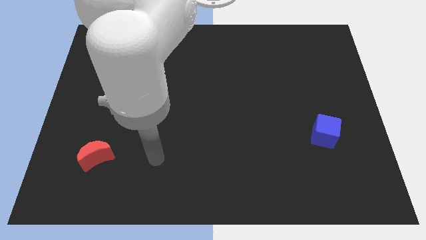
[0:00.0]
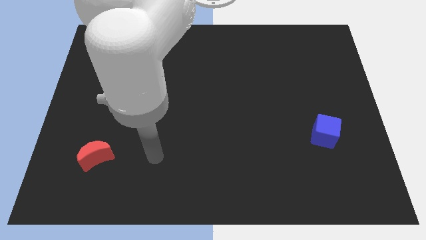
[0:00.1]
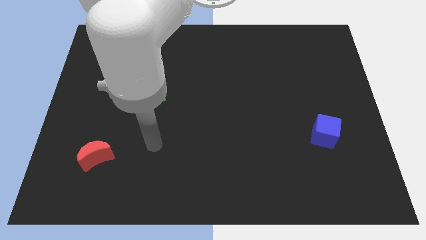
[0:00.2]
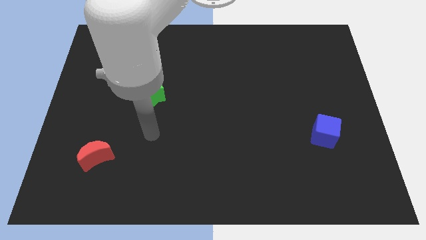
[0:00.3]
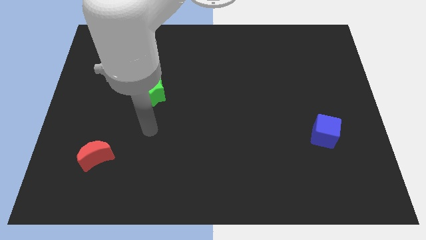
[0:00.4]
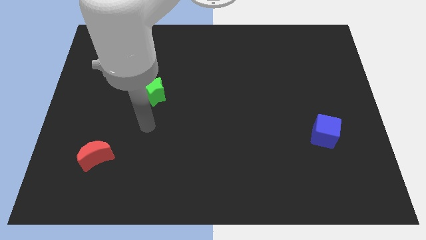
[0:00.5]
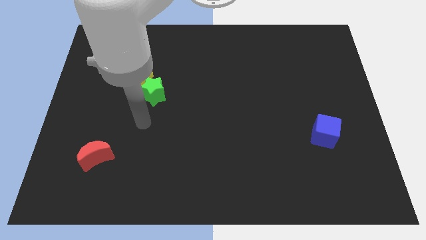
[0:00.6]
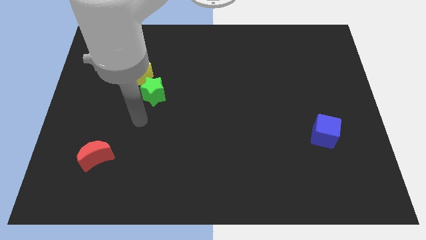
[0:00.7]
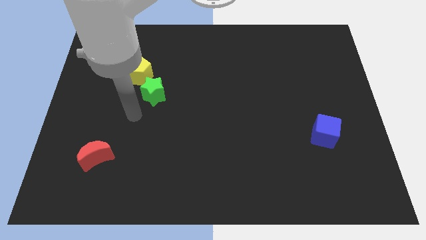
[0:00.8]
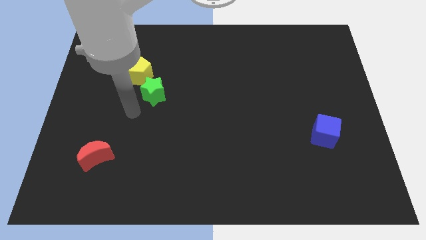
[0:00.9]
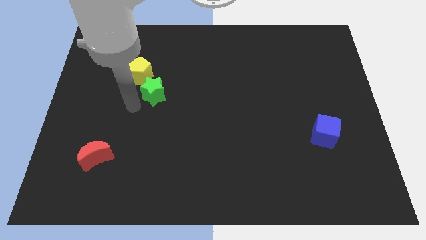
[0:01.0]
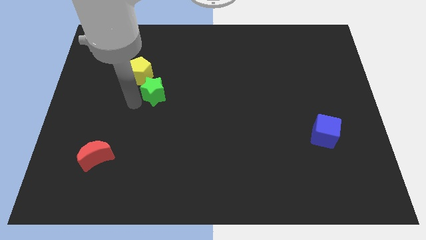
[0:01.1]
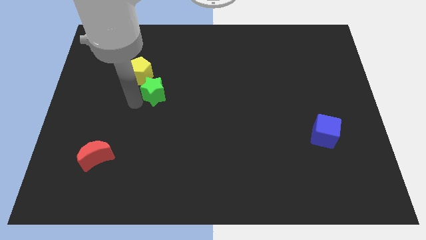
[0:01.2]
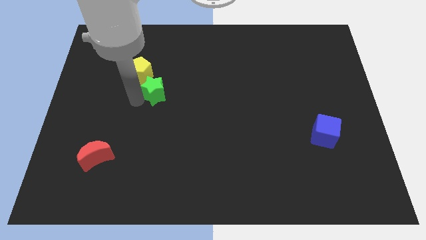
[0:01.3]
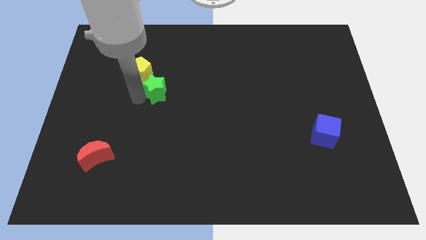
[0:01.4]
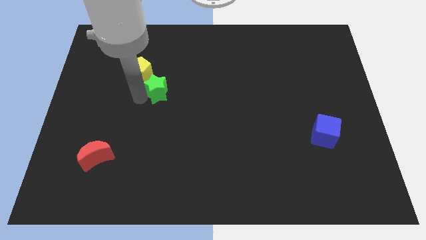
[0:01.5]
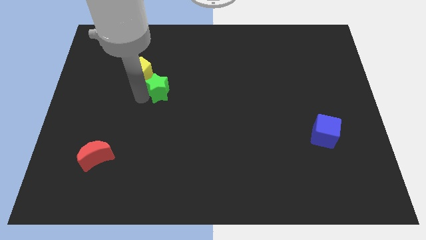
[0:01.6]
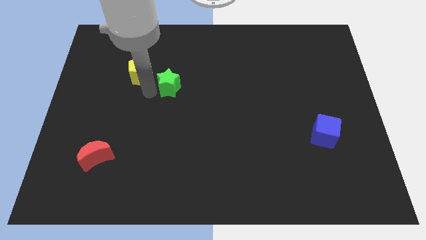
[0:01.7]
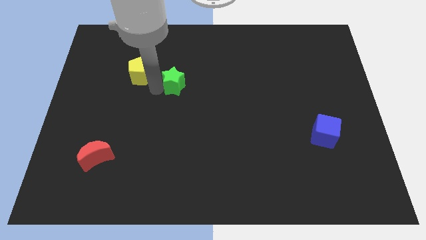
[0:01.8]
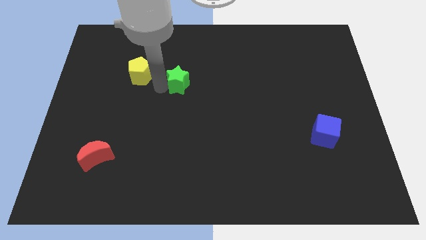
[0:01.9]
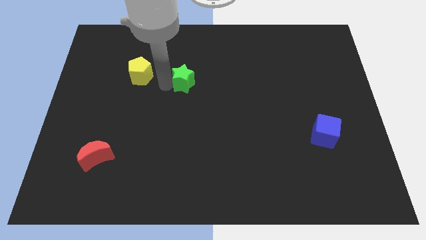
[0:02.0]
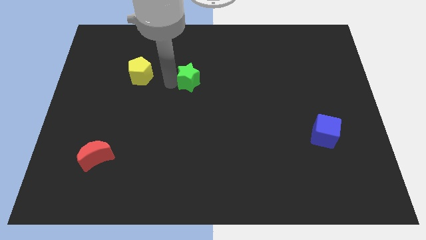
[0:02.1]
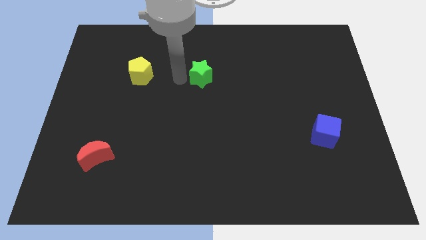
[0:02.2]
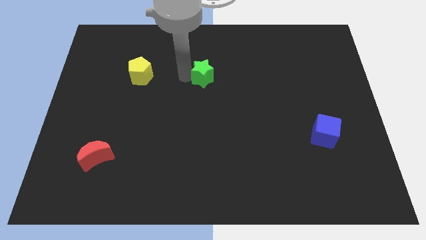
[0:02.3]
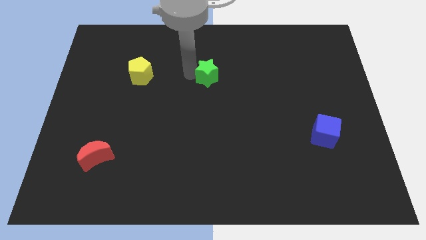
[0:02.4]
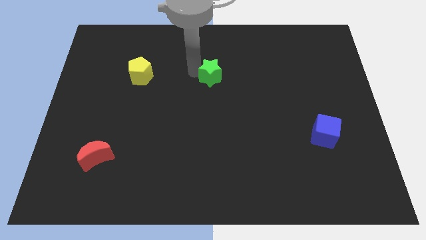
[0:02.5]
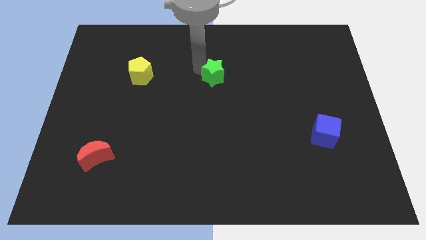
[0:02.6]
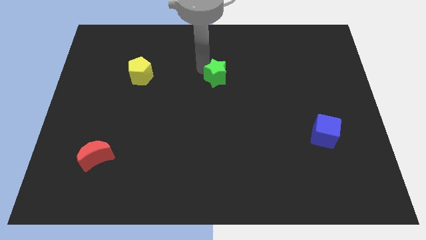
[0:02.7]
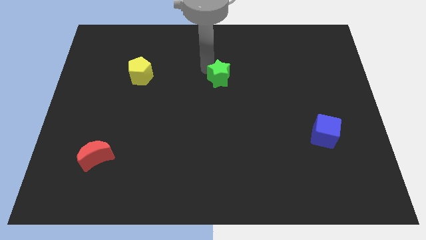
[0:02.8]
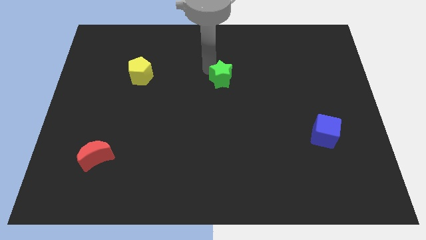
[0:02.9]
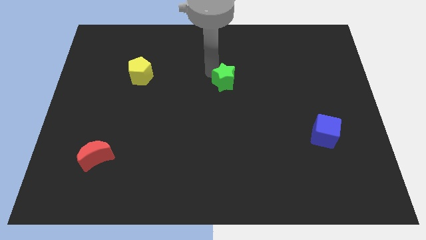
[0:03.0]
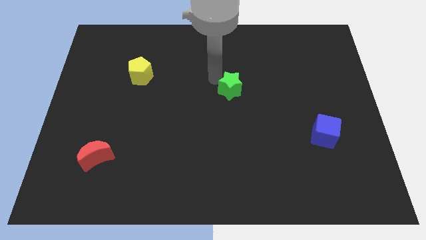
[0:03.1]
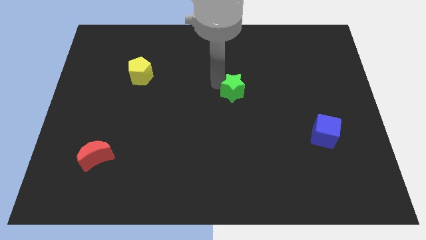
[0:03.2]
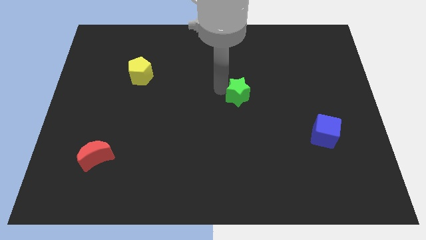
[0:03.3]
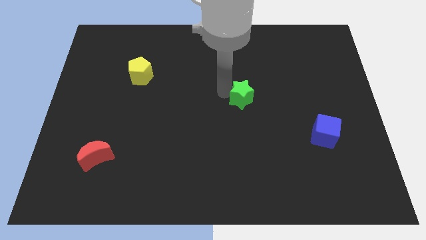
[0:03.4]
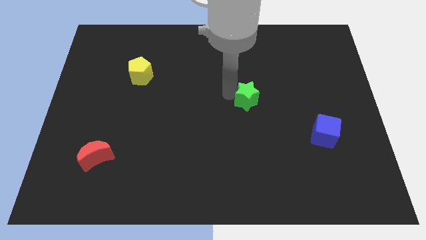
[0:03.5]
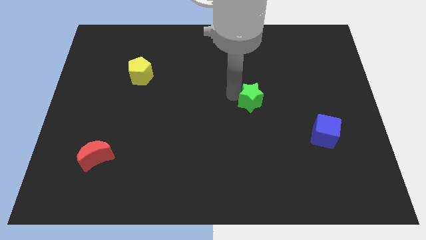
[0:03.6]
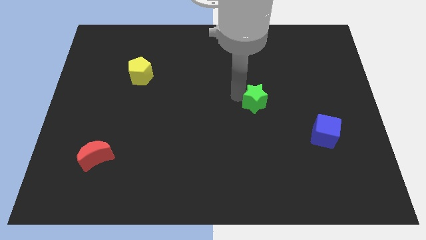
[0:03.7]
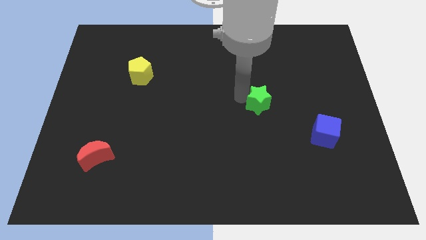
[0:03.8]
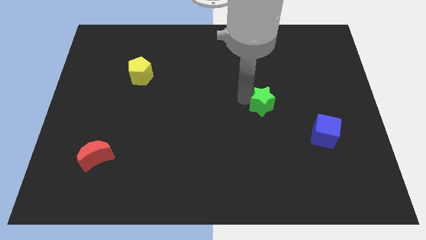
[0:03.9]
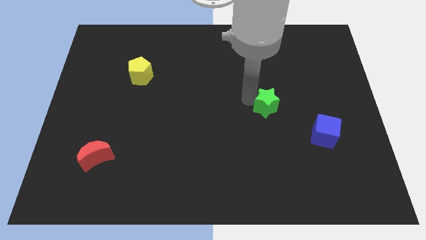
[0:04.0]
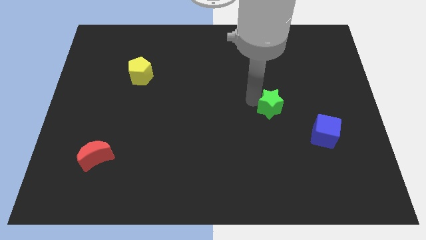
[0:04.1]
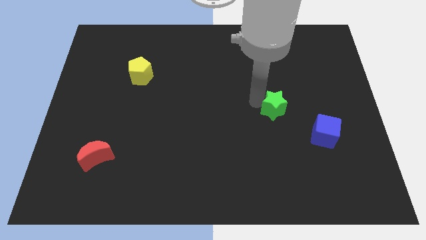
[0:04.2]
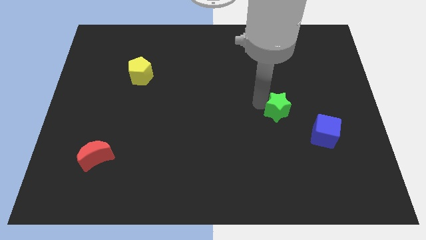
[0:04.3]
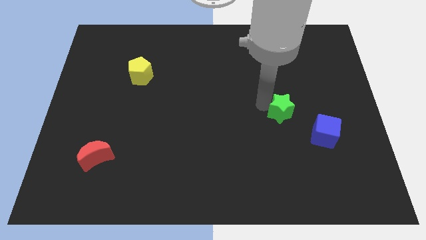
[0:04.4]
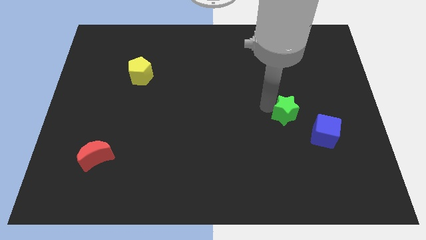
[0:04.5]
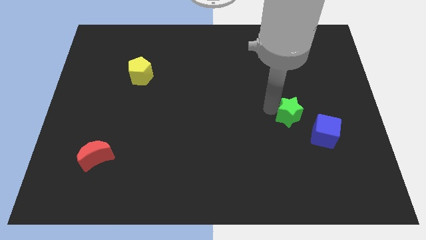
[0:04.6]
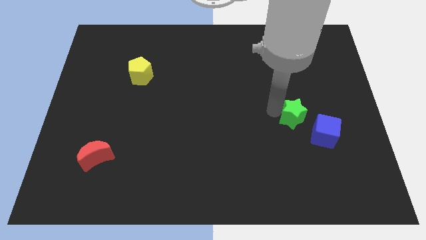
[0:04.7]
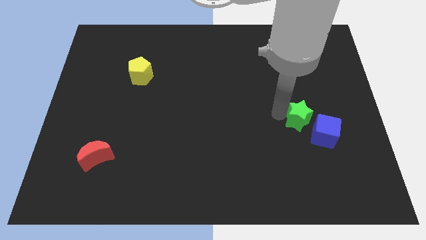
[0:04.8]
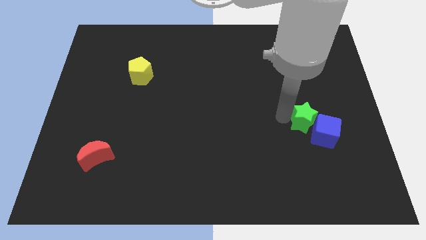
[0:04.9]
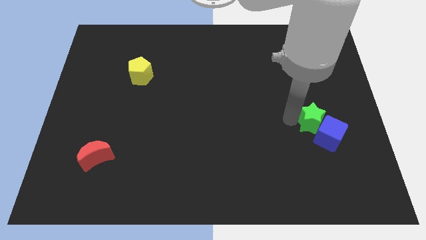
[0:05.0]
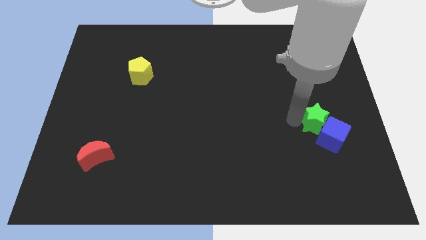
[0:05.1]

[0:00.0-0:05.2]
slide the green star next to the blue block

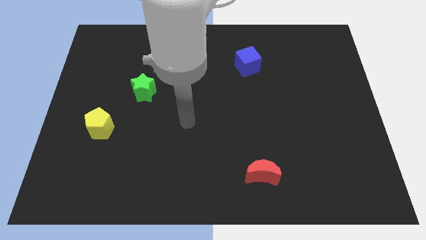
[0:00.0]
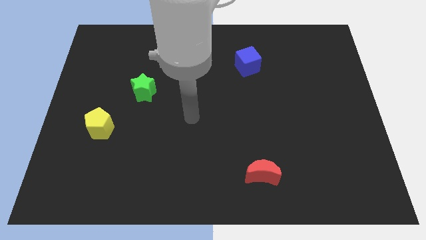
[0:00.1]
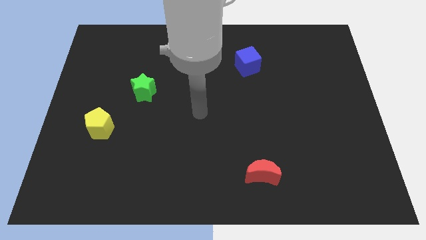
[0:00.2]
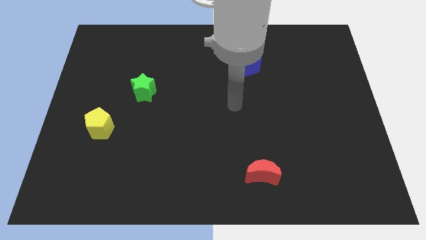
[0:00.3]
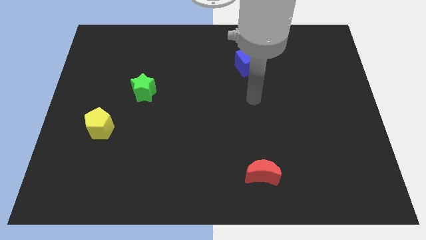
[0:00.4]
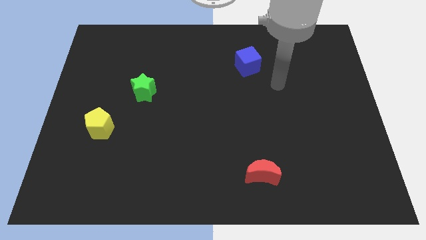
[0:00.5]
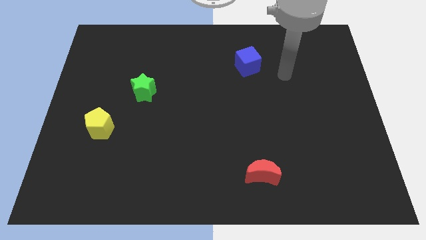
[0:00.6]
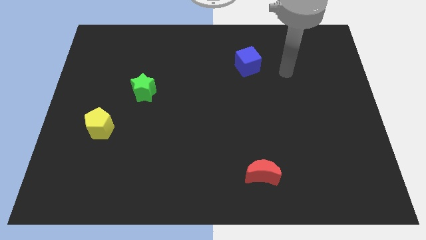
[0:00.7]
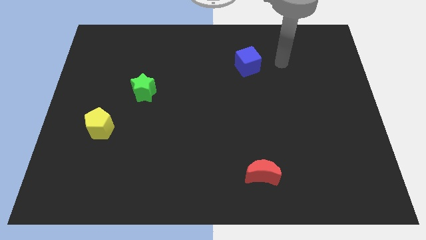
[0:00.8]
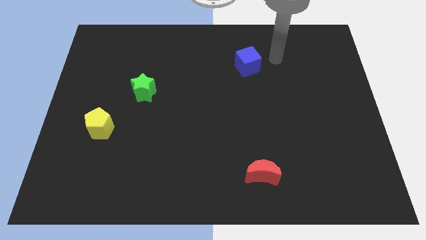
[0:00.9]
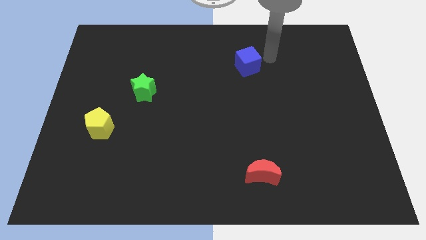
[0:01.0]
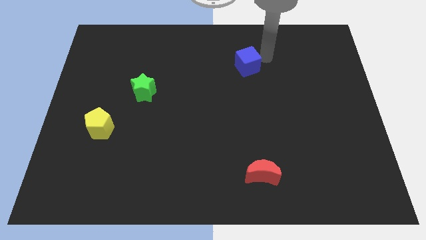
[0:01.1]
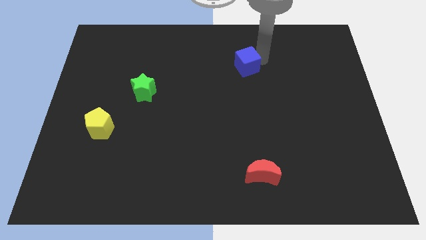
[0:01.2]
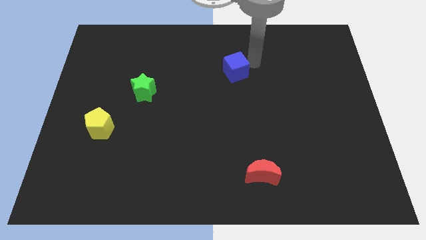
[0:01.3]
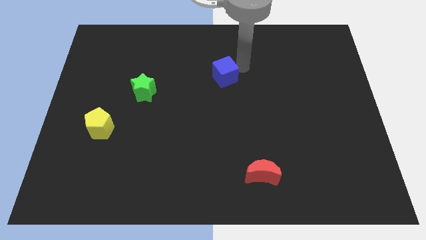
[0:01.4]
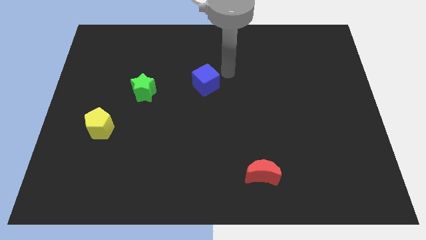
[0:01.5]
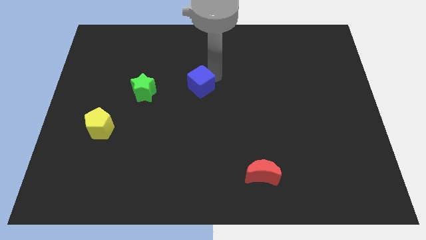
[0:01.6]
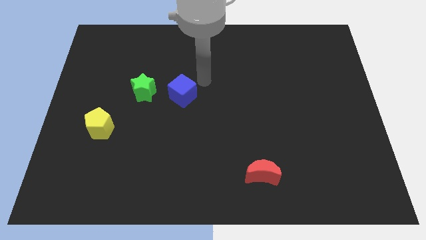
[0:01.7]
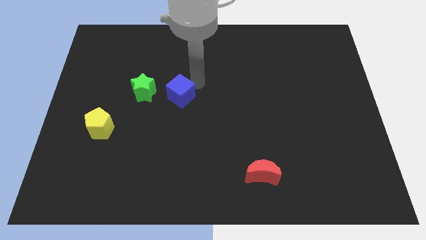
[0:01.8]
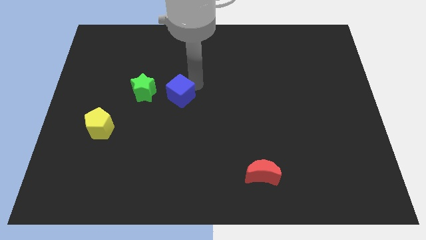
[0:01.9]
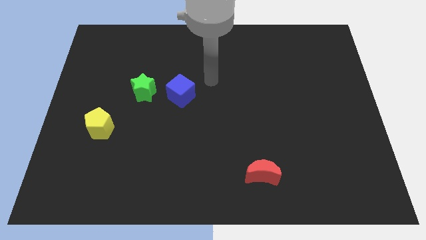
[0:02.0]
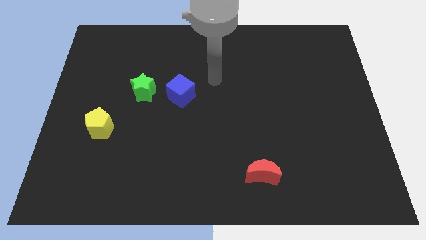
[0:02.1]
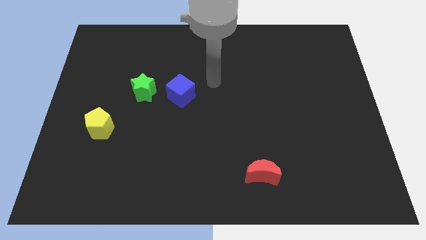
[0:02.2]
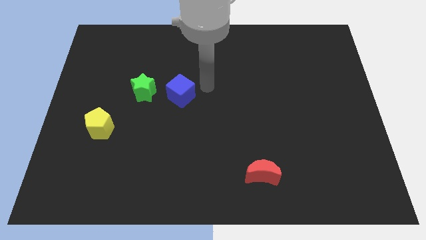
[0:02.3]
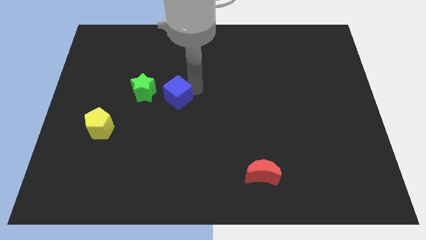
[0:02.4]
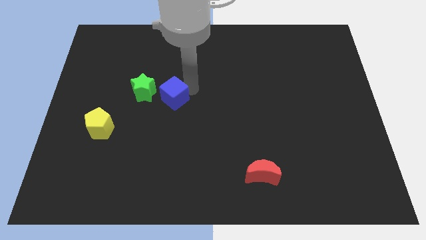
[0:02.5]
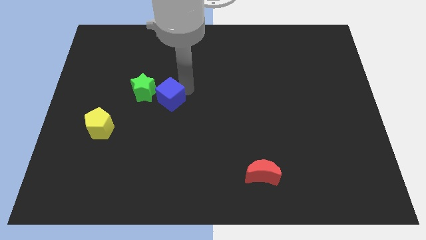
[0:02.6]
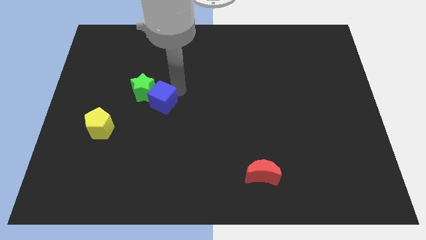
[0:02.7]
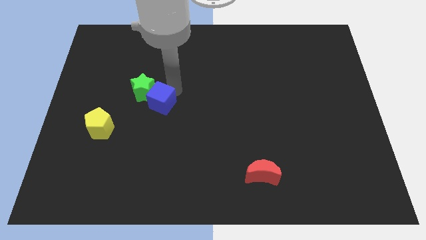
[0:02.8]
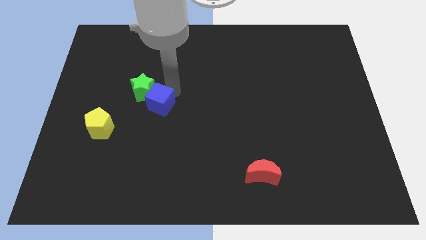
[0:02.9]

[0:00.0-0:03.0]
push the cube towards the green block

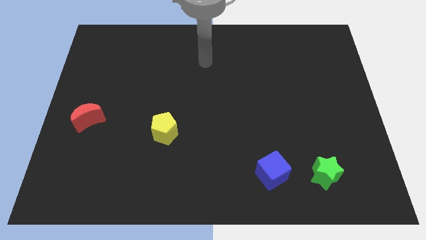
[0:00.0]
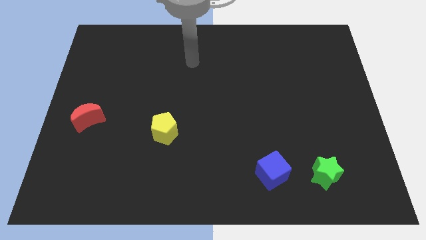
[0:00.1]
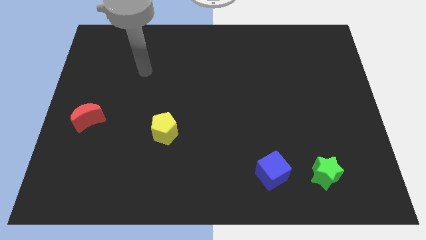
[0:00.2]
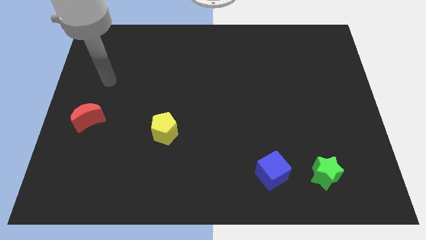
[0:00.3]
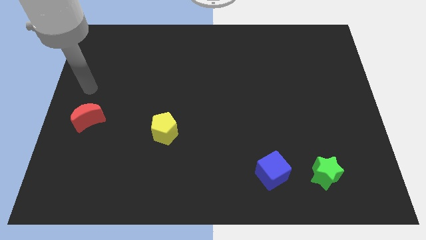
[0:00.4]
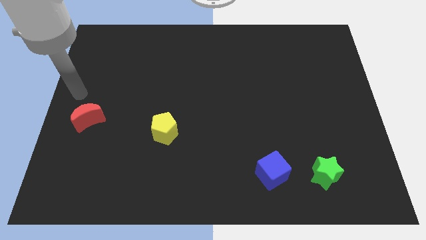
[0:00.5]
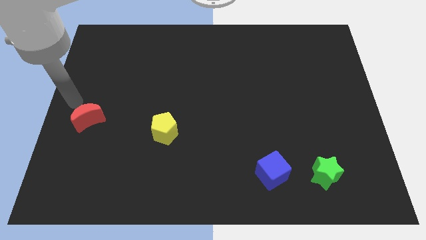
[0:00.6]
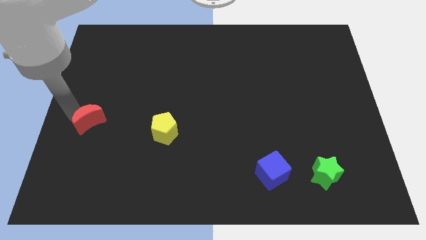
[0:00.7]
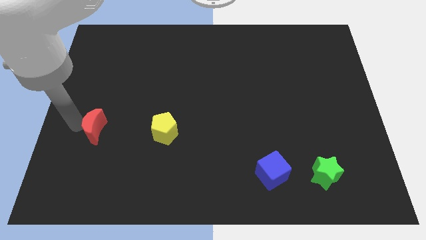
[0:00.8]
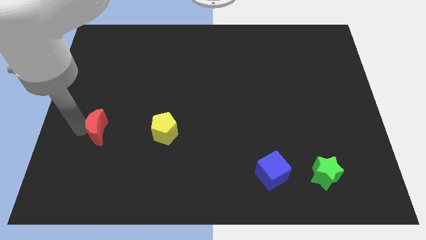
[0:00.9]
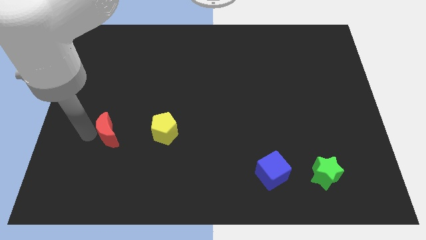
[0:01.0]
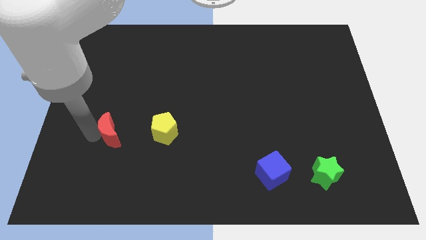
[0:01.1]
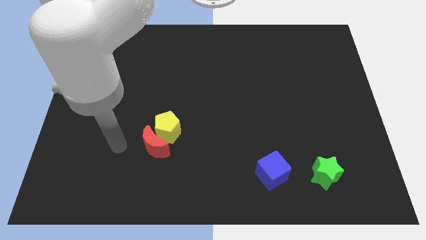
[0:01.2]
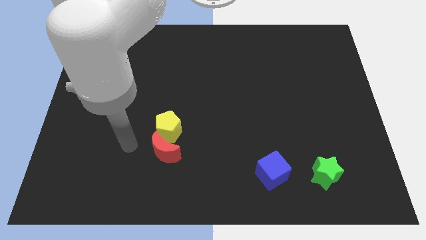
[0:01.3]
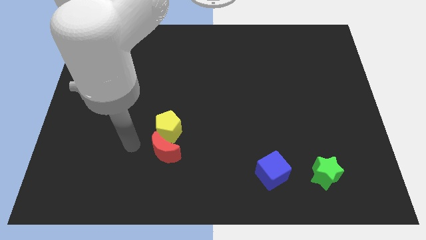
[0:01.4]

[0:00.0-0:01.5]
move the red moon next to the yellow block
